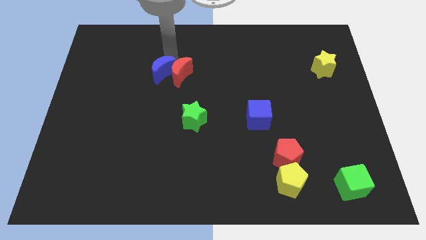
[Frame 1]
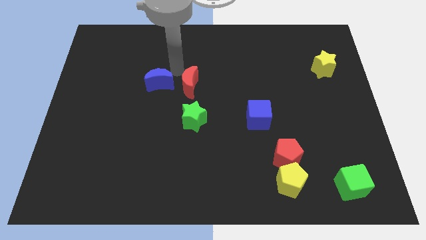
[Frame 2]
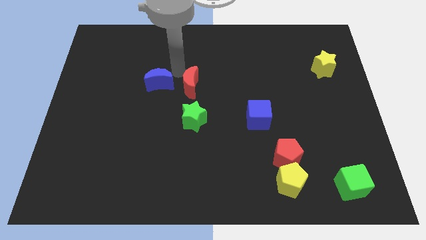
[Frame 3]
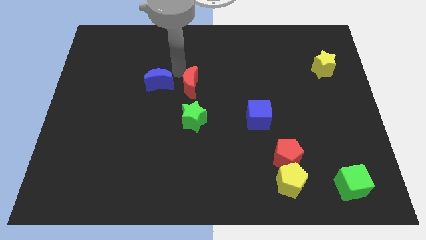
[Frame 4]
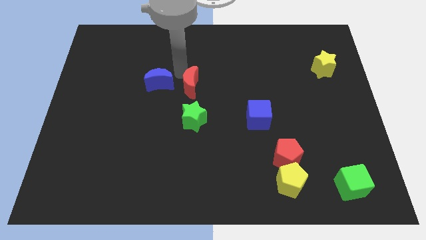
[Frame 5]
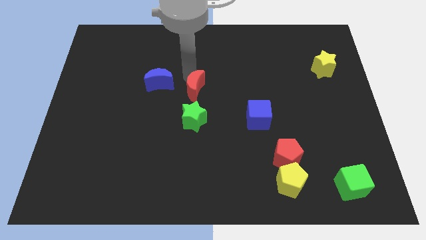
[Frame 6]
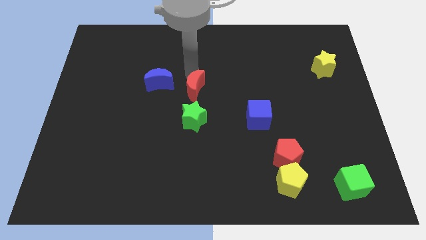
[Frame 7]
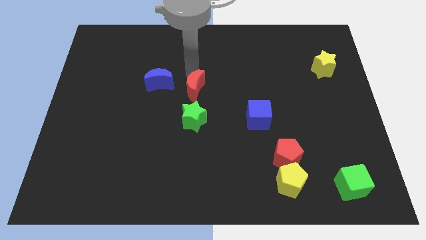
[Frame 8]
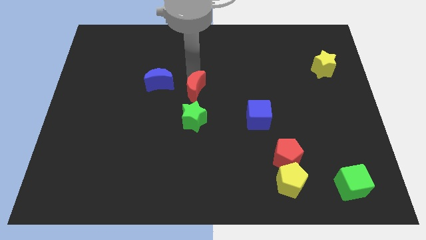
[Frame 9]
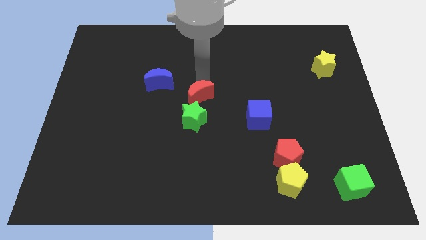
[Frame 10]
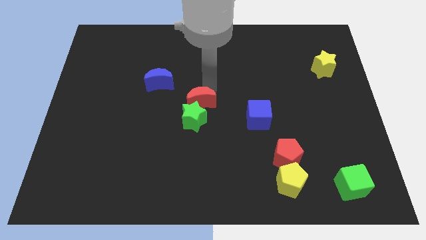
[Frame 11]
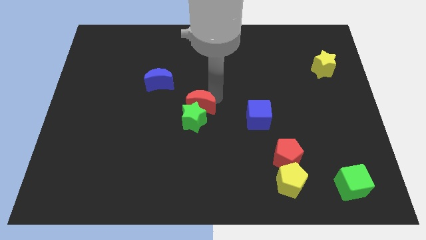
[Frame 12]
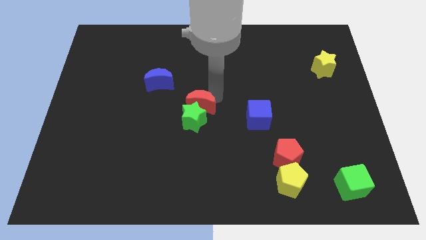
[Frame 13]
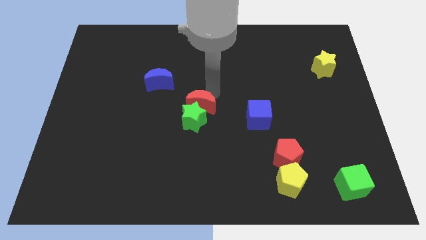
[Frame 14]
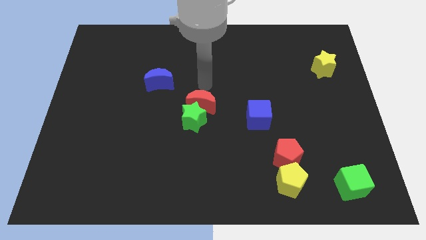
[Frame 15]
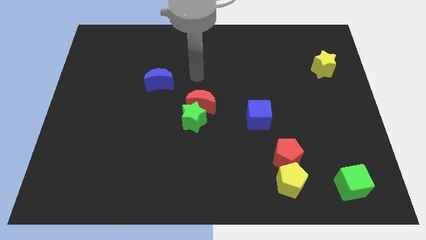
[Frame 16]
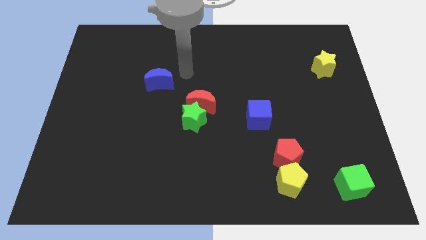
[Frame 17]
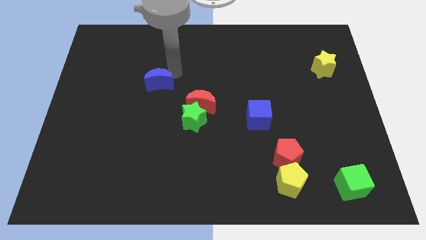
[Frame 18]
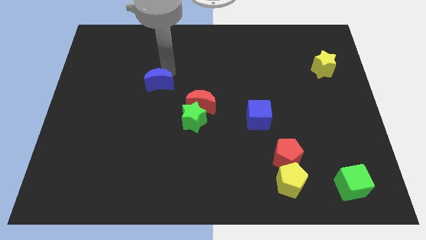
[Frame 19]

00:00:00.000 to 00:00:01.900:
separate the red moon on top into green star

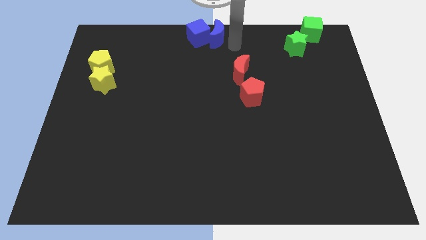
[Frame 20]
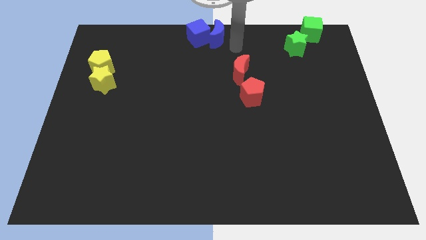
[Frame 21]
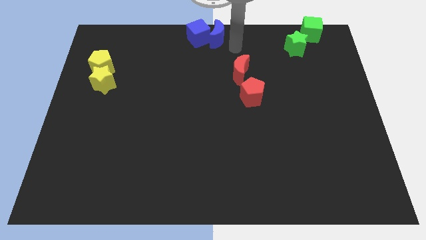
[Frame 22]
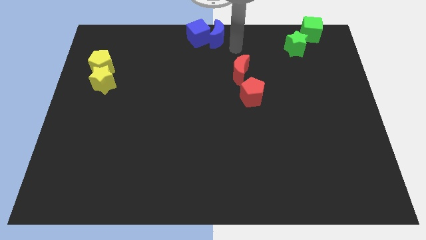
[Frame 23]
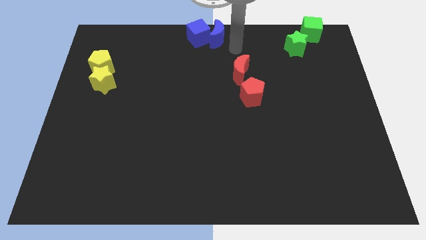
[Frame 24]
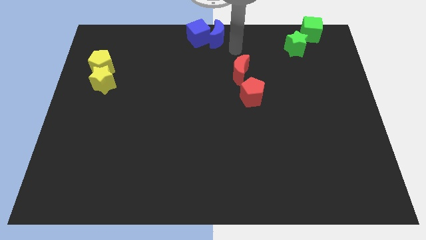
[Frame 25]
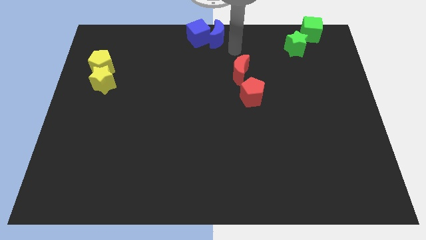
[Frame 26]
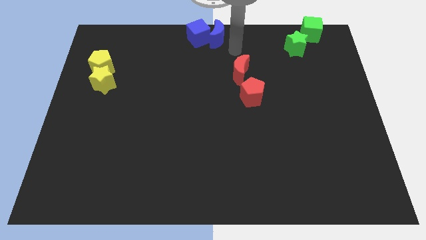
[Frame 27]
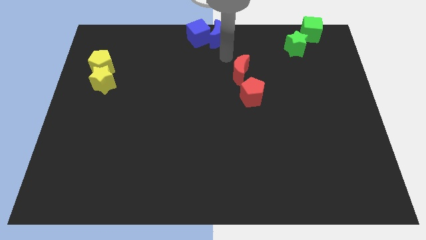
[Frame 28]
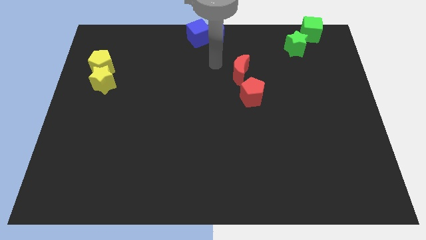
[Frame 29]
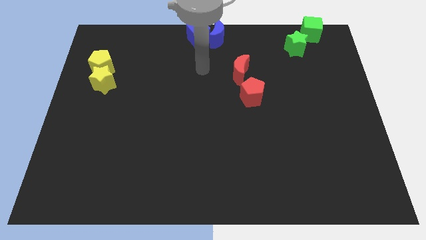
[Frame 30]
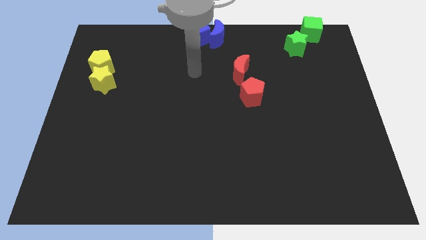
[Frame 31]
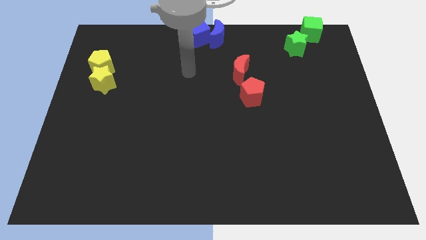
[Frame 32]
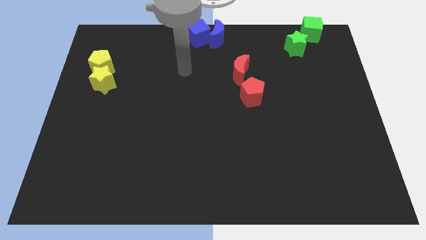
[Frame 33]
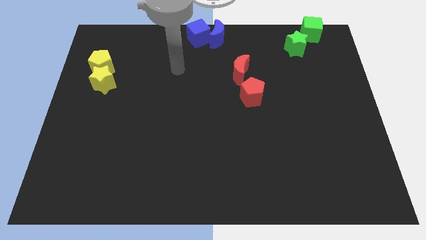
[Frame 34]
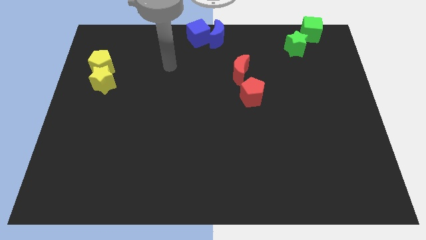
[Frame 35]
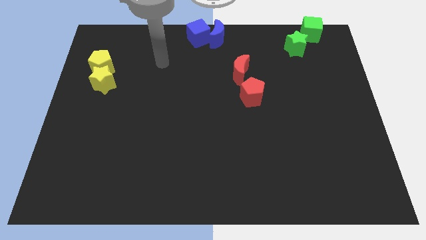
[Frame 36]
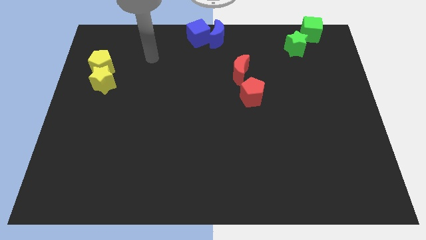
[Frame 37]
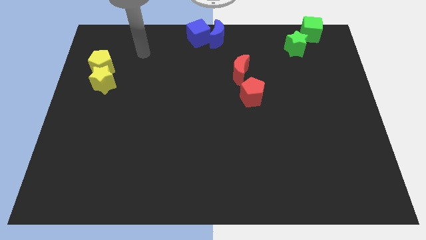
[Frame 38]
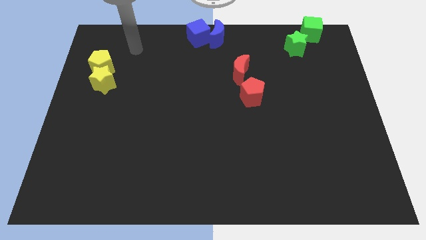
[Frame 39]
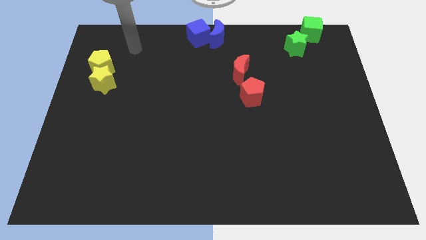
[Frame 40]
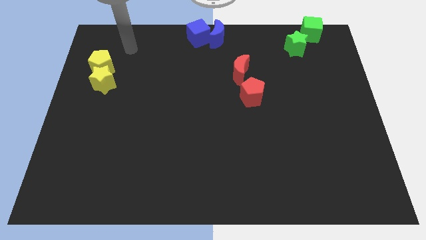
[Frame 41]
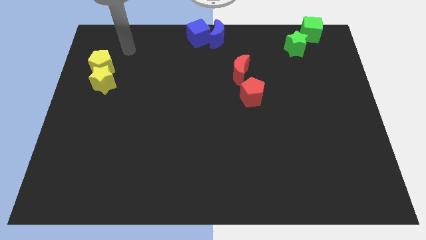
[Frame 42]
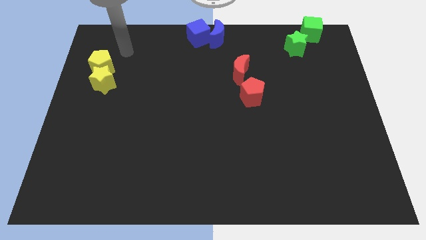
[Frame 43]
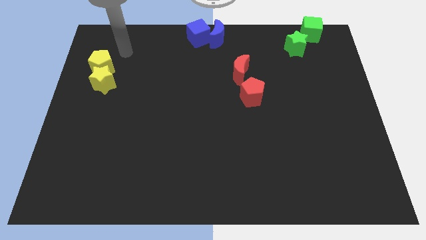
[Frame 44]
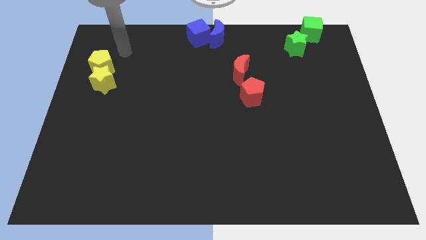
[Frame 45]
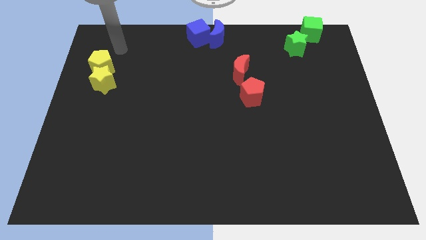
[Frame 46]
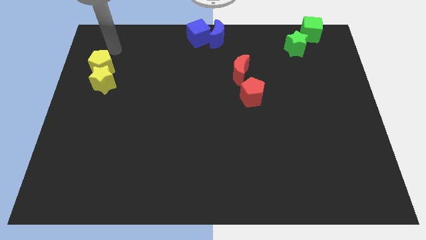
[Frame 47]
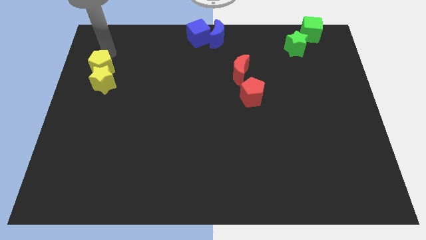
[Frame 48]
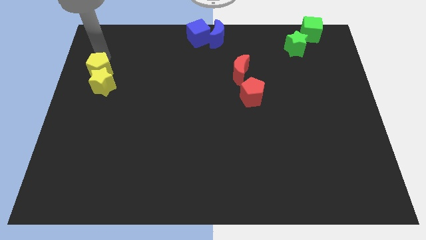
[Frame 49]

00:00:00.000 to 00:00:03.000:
place the arm above the yellow pentagon

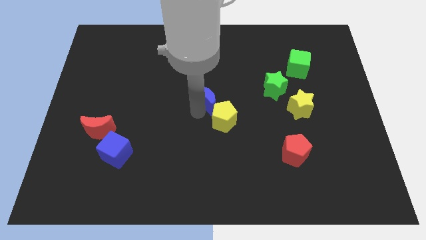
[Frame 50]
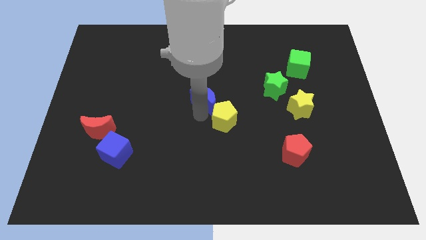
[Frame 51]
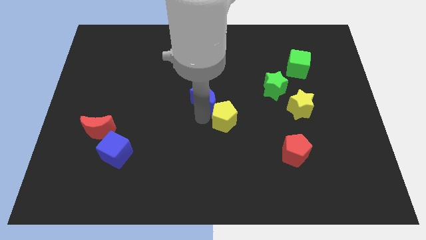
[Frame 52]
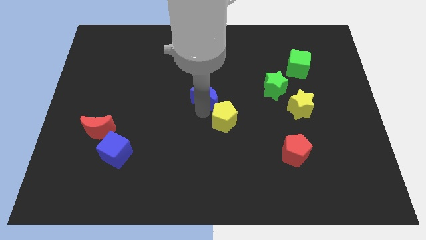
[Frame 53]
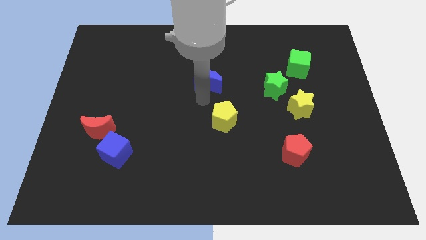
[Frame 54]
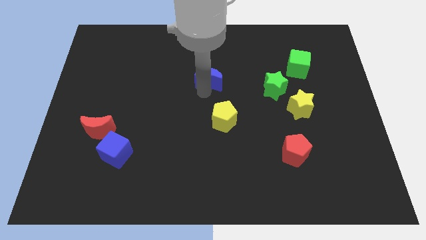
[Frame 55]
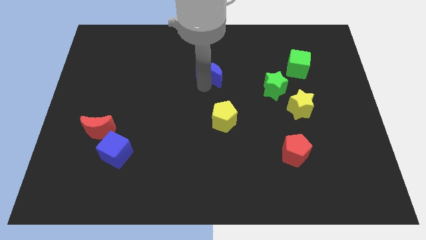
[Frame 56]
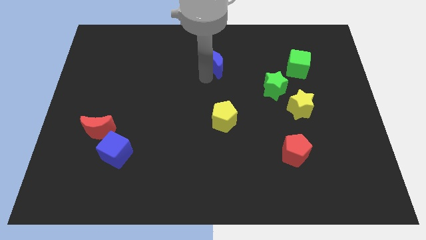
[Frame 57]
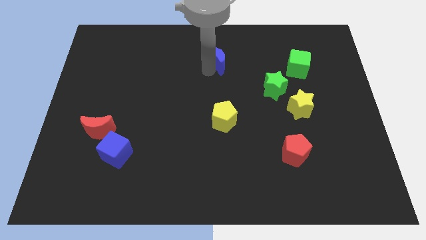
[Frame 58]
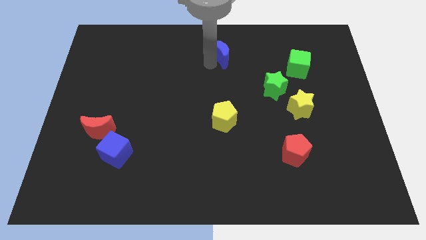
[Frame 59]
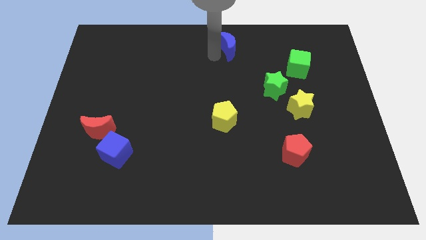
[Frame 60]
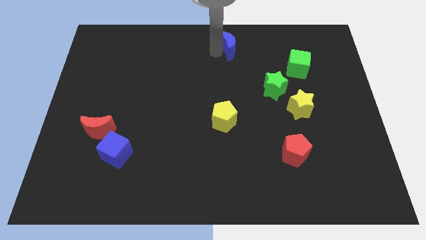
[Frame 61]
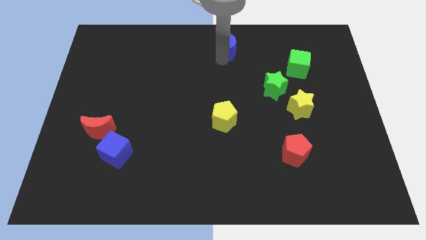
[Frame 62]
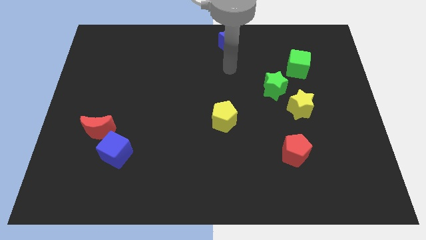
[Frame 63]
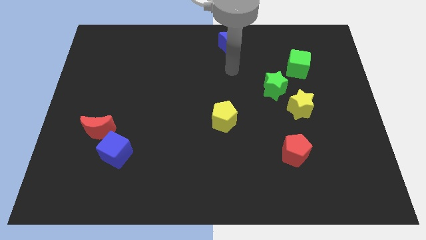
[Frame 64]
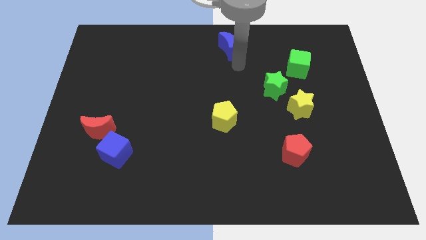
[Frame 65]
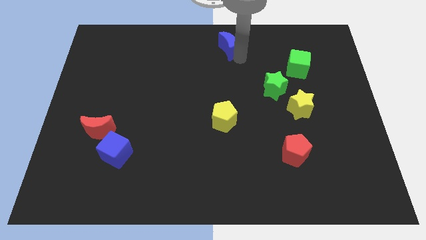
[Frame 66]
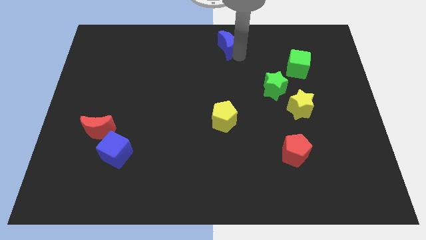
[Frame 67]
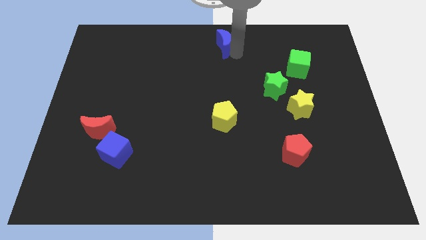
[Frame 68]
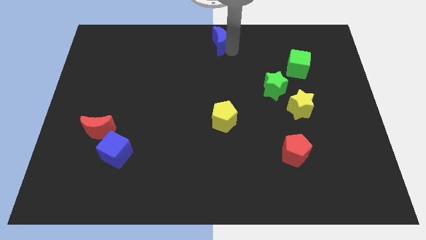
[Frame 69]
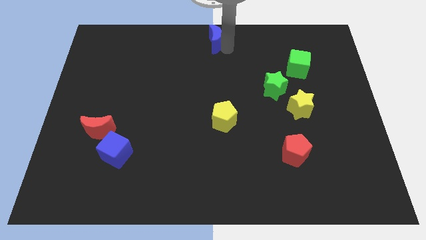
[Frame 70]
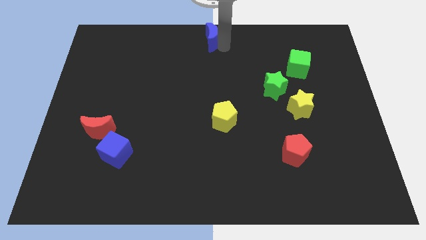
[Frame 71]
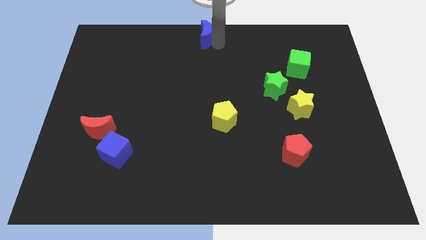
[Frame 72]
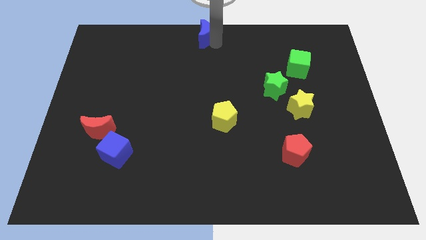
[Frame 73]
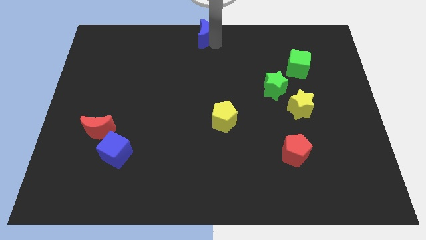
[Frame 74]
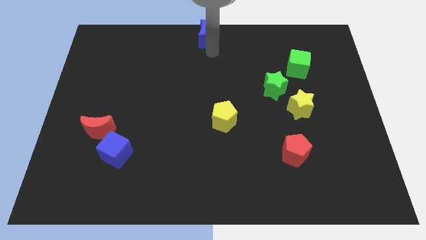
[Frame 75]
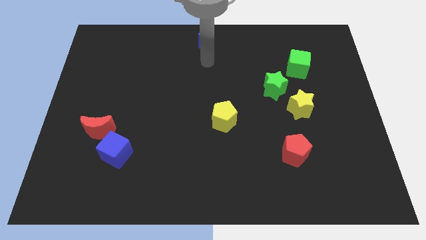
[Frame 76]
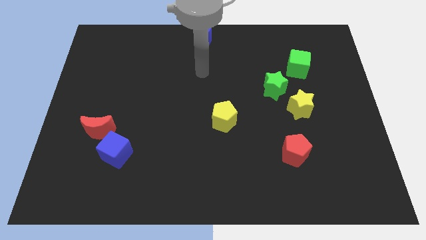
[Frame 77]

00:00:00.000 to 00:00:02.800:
move blue moon at center top

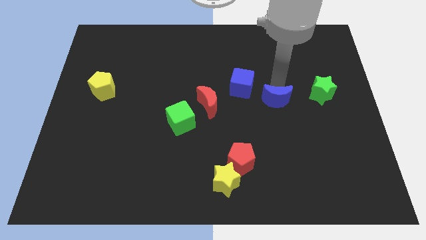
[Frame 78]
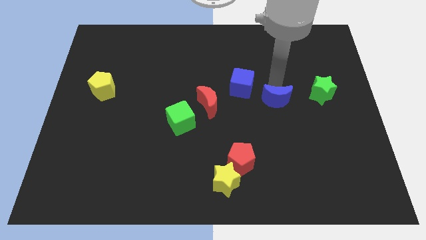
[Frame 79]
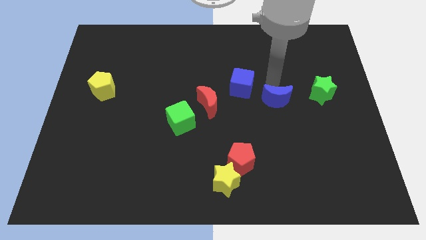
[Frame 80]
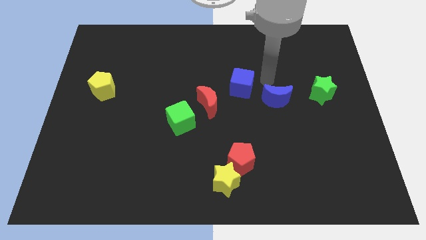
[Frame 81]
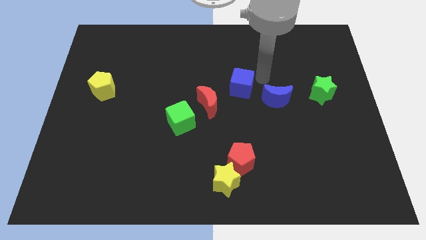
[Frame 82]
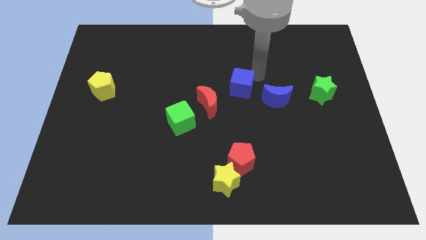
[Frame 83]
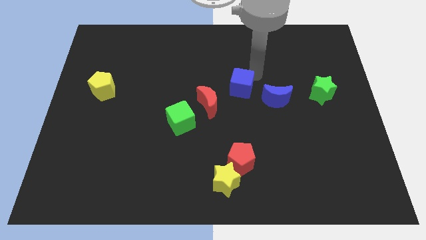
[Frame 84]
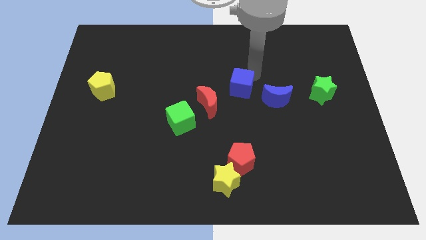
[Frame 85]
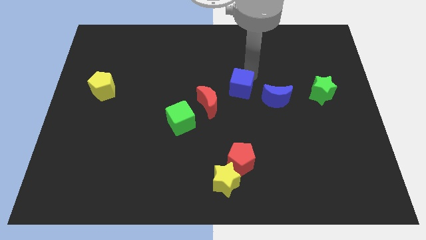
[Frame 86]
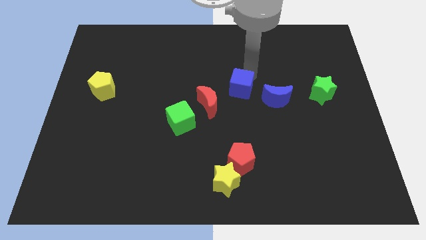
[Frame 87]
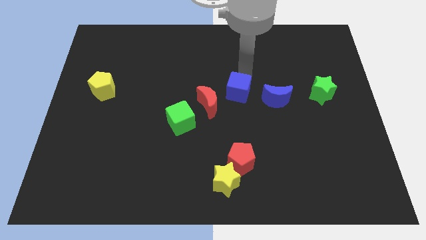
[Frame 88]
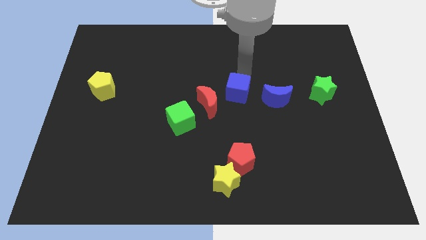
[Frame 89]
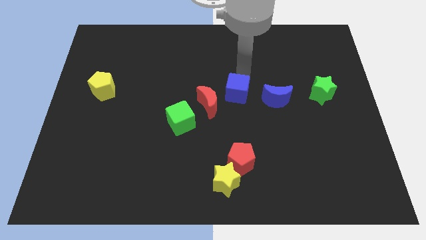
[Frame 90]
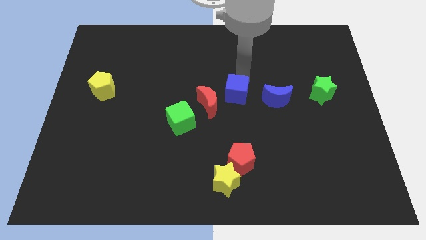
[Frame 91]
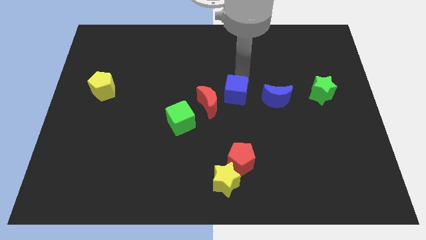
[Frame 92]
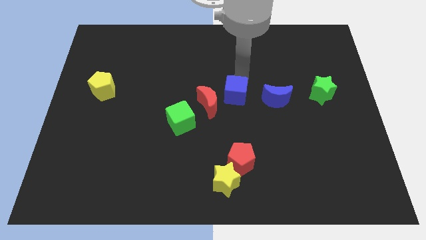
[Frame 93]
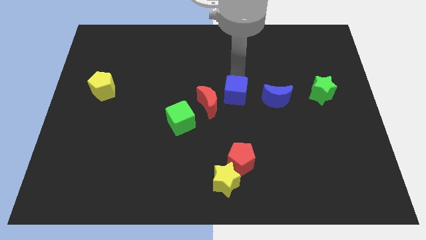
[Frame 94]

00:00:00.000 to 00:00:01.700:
move the blue cube to the left side of the blue moon
